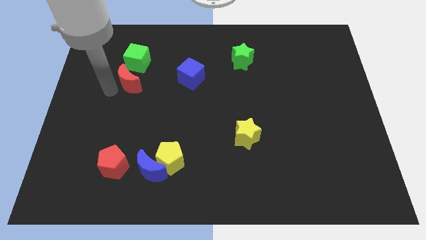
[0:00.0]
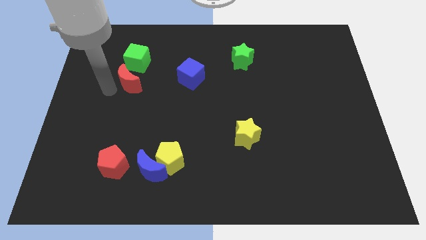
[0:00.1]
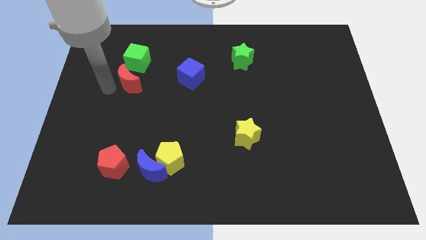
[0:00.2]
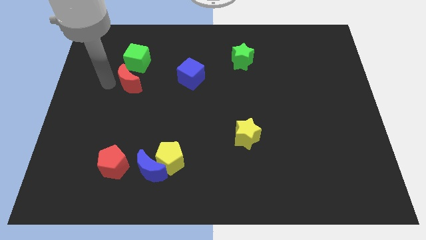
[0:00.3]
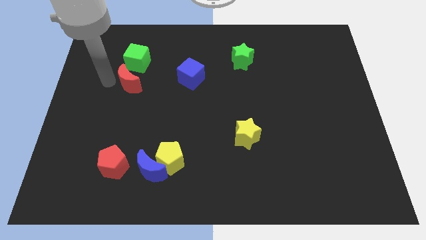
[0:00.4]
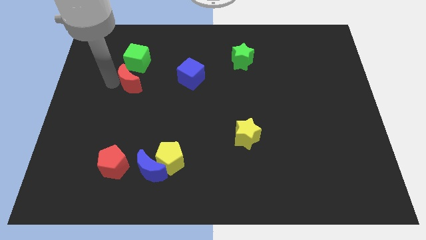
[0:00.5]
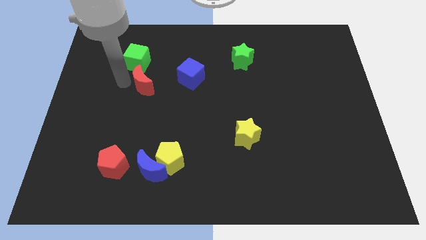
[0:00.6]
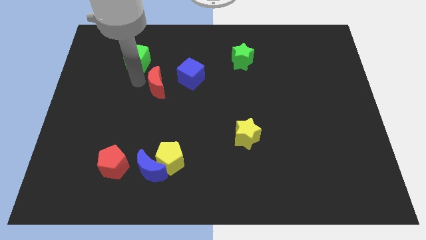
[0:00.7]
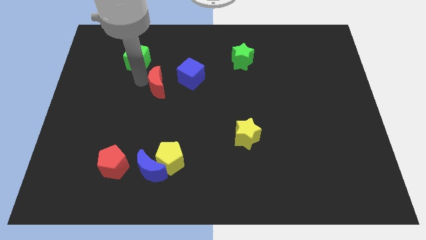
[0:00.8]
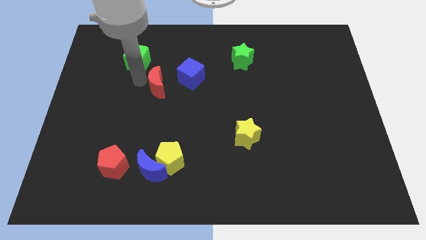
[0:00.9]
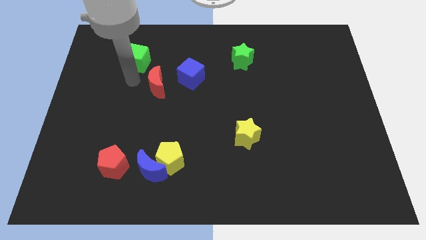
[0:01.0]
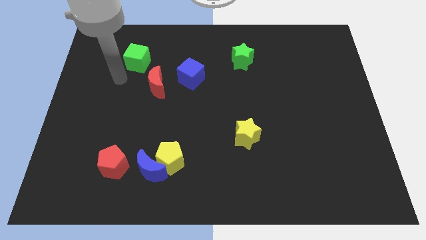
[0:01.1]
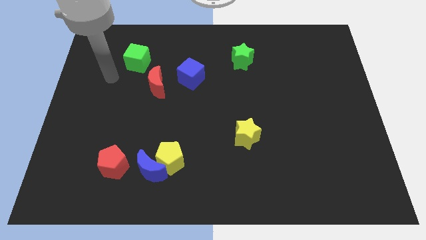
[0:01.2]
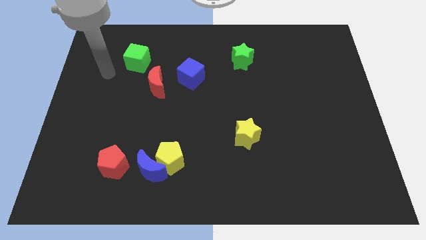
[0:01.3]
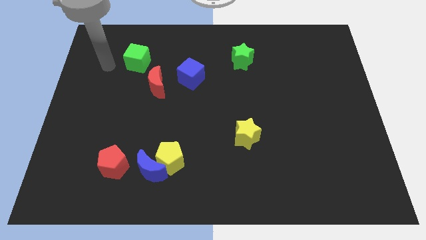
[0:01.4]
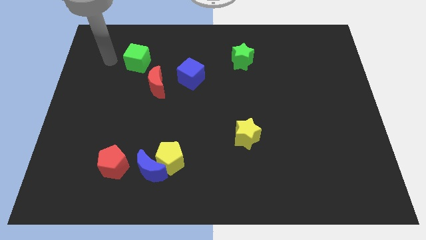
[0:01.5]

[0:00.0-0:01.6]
push the red moon towards the blue cube

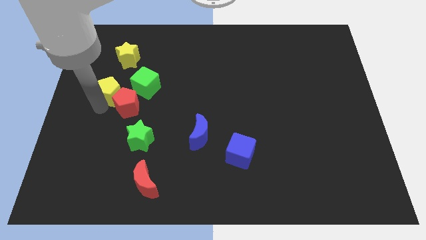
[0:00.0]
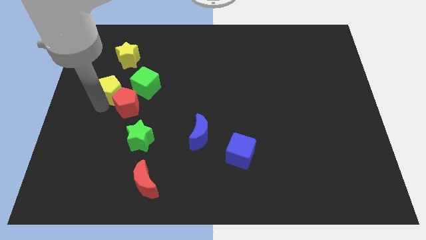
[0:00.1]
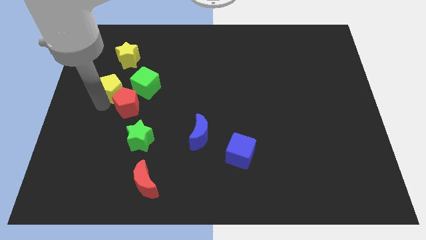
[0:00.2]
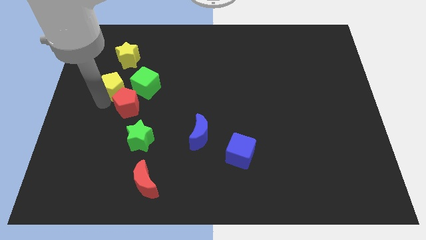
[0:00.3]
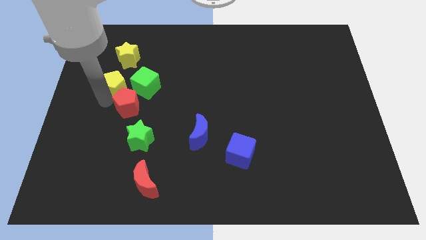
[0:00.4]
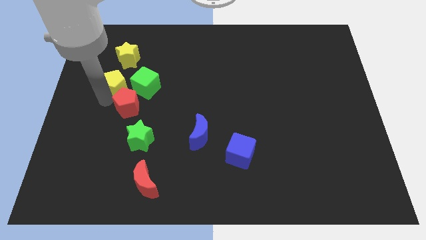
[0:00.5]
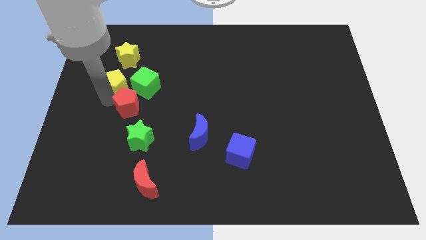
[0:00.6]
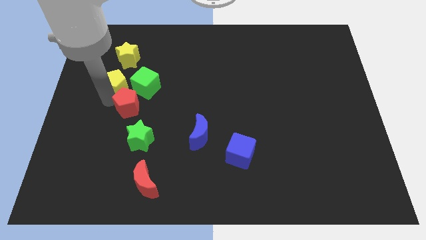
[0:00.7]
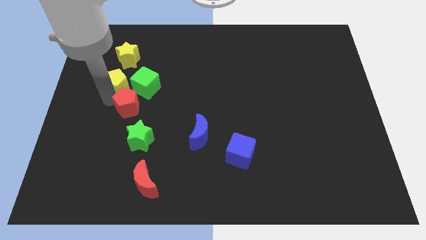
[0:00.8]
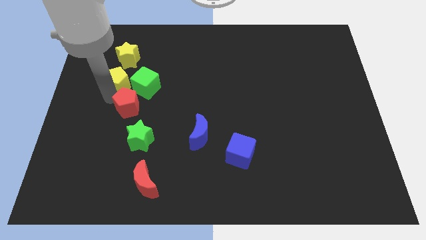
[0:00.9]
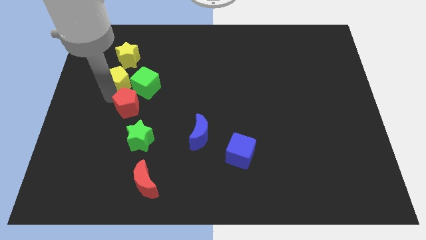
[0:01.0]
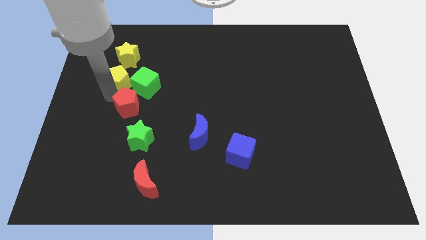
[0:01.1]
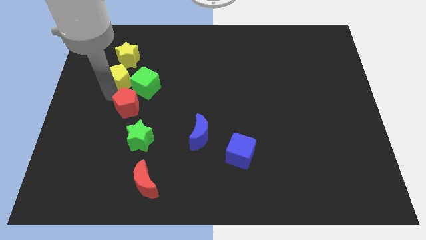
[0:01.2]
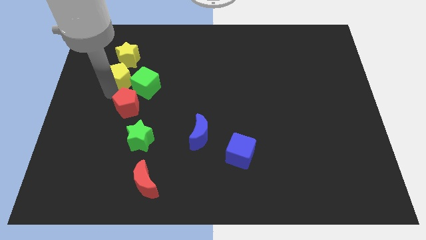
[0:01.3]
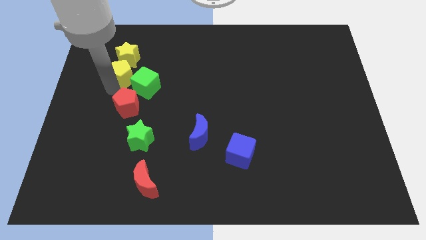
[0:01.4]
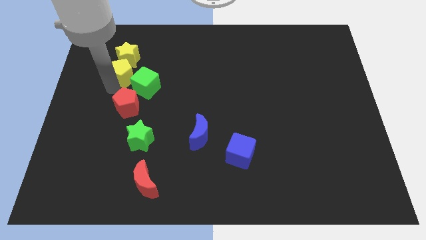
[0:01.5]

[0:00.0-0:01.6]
push the yellow pentagon to the left of the green cube

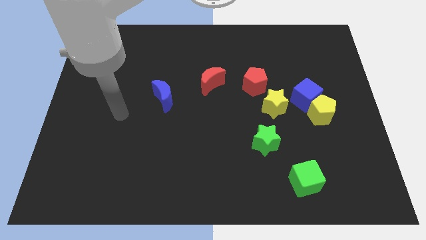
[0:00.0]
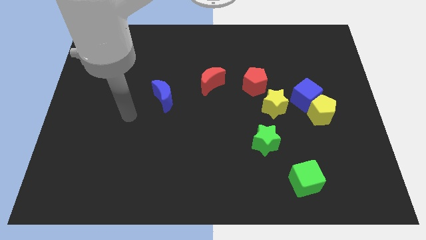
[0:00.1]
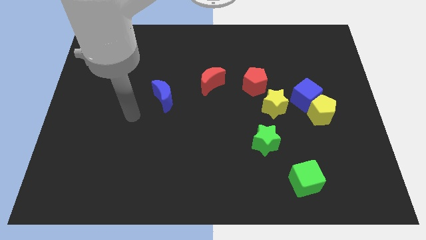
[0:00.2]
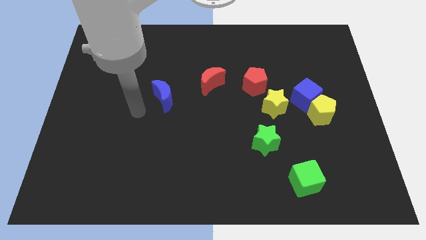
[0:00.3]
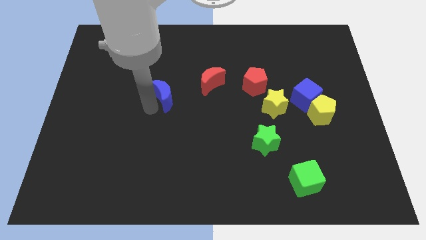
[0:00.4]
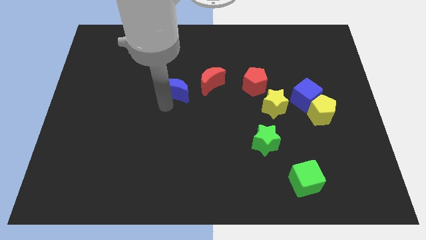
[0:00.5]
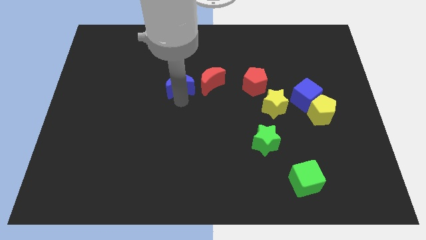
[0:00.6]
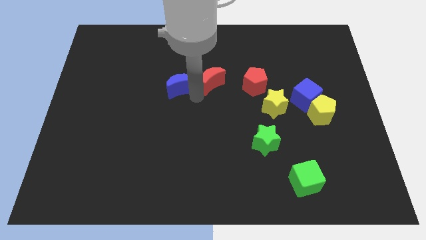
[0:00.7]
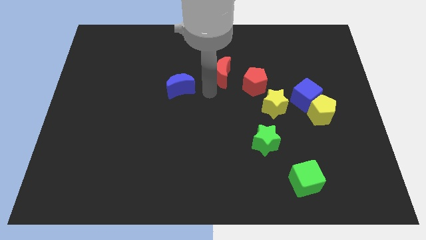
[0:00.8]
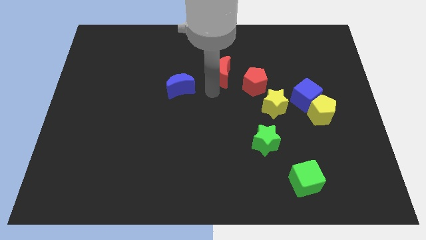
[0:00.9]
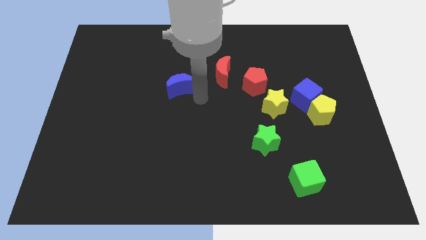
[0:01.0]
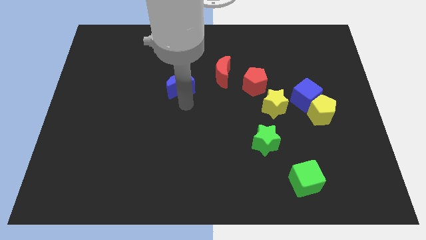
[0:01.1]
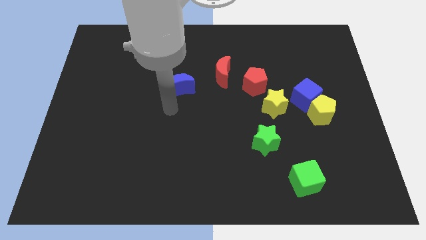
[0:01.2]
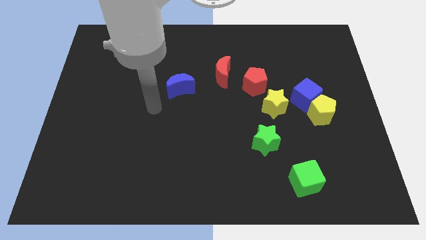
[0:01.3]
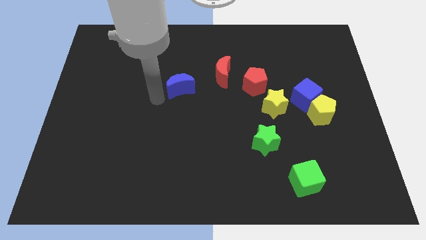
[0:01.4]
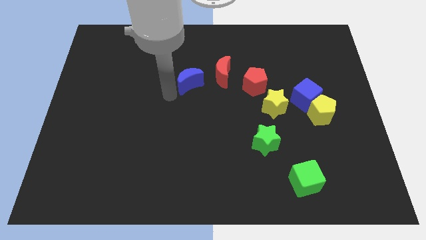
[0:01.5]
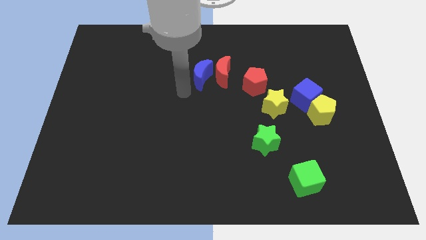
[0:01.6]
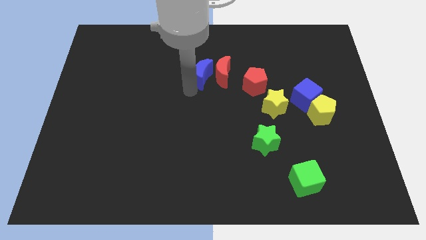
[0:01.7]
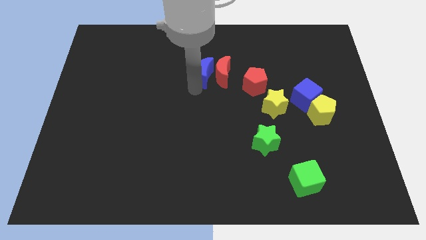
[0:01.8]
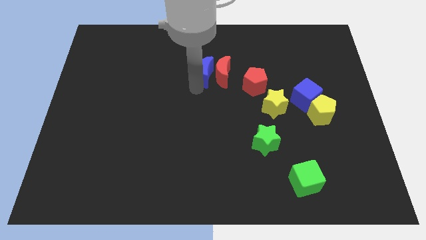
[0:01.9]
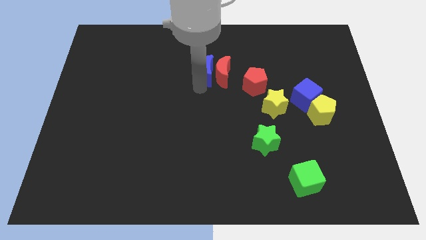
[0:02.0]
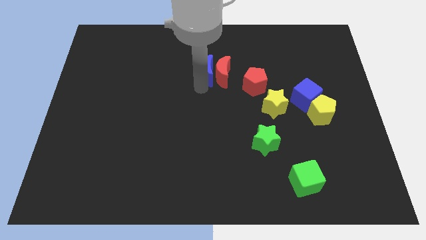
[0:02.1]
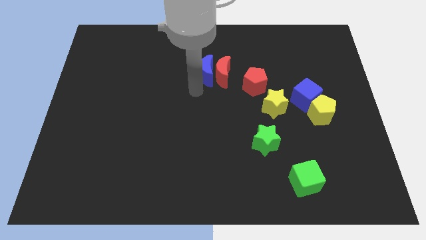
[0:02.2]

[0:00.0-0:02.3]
place both the crescents together

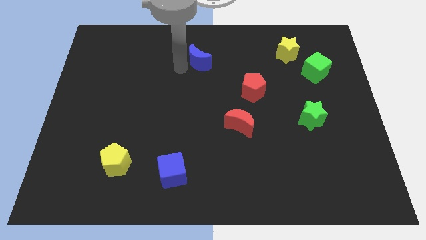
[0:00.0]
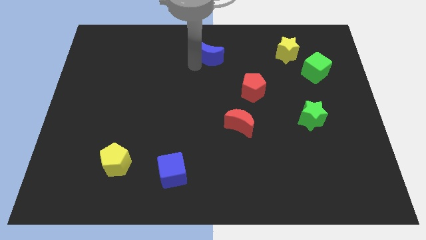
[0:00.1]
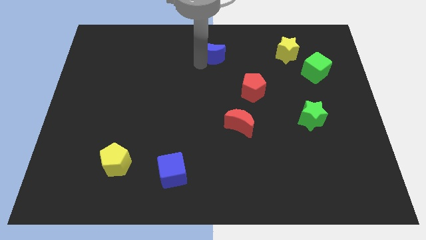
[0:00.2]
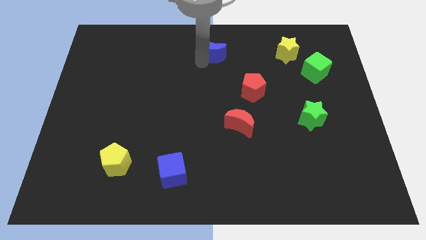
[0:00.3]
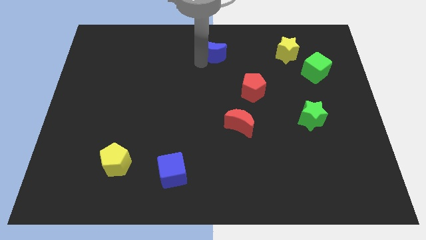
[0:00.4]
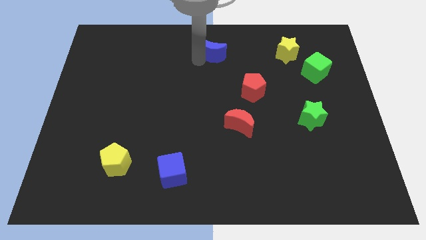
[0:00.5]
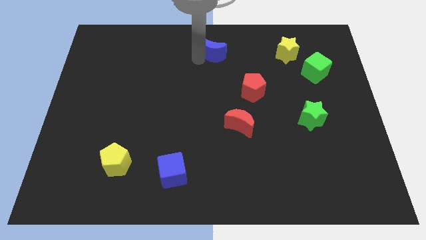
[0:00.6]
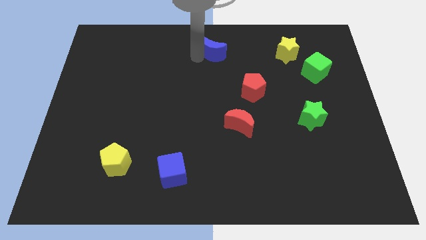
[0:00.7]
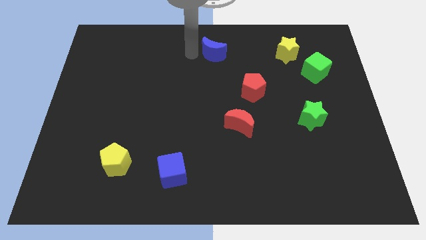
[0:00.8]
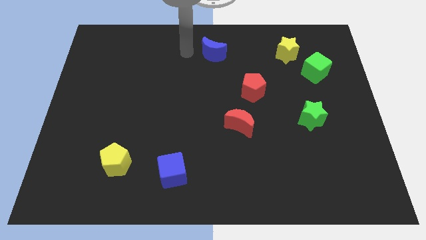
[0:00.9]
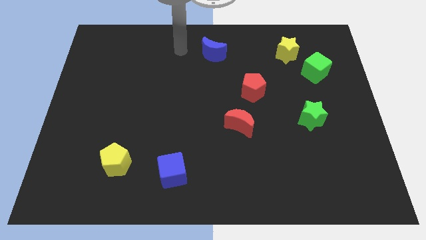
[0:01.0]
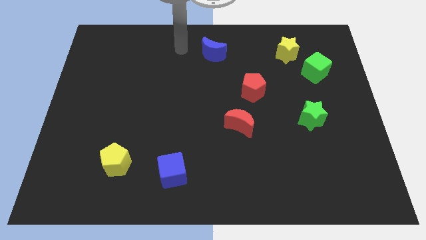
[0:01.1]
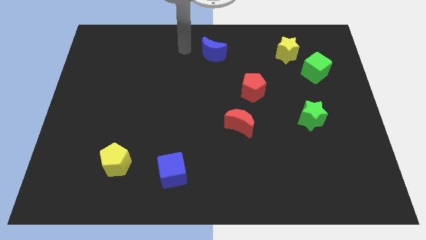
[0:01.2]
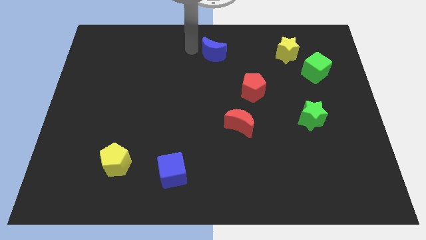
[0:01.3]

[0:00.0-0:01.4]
put the blue moon to the top center of the board

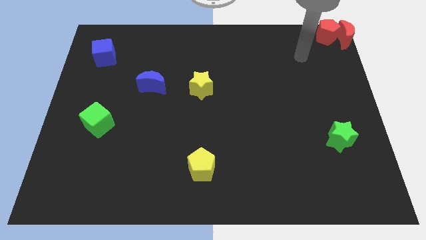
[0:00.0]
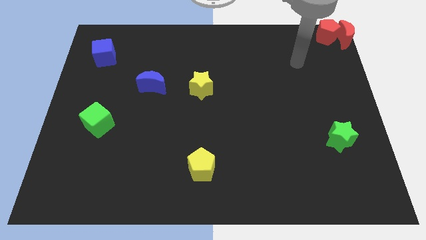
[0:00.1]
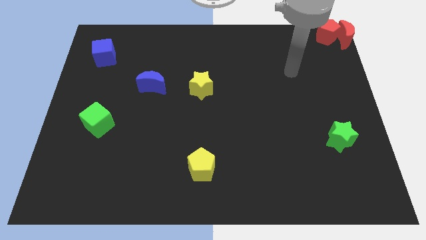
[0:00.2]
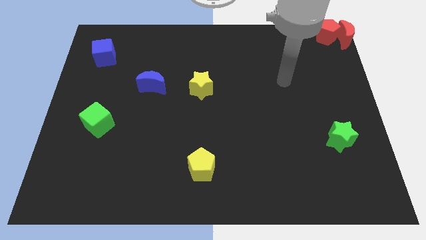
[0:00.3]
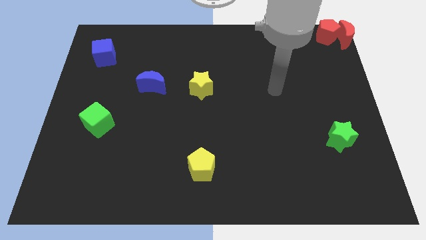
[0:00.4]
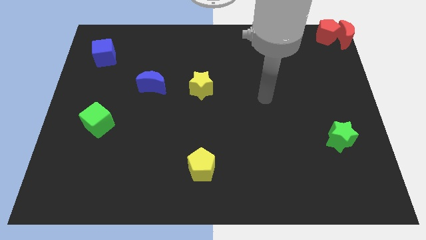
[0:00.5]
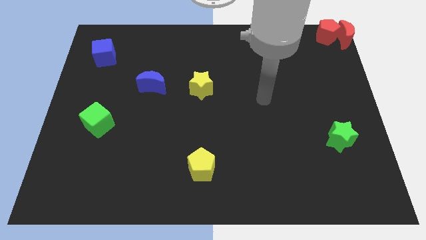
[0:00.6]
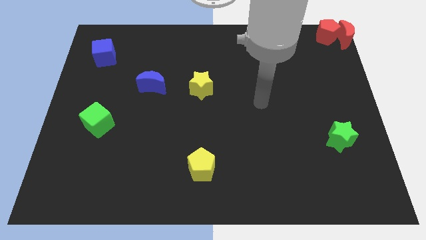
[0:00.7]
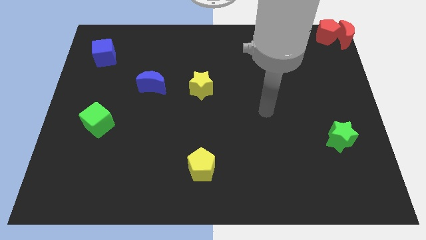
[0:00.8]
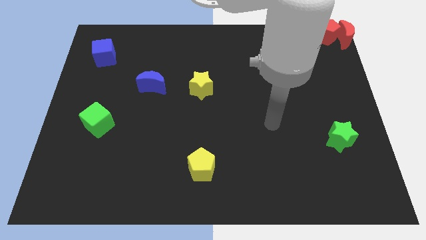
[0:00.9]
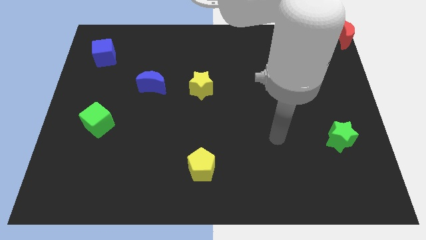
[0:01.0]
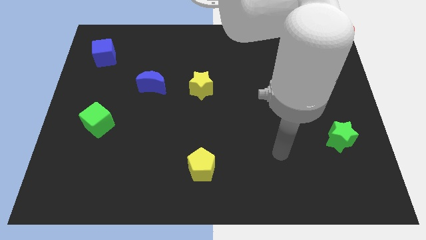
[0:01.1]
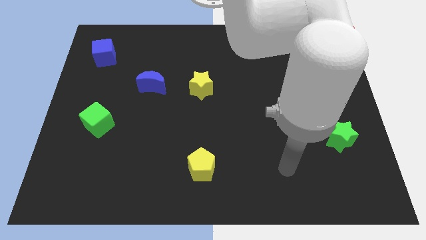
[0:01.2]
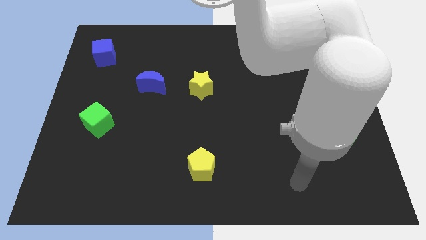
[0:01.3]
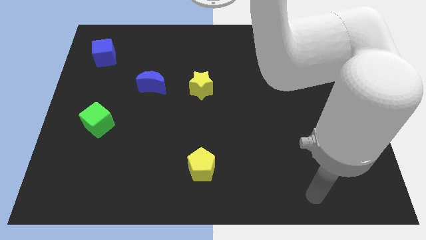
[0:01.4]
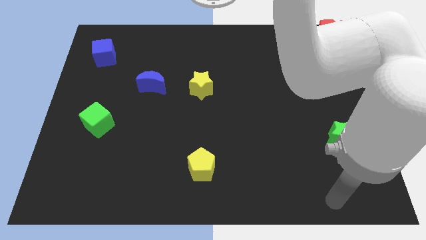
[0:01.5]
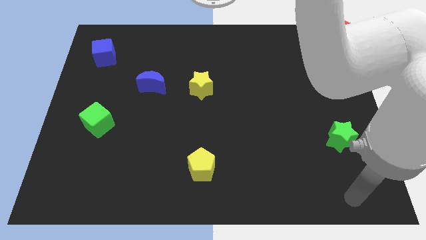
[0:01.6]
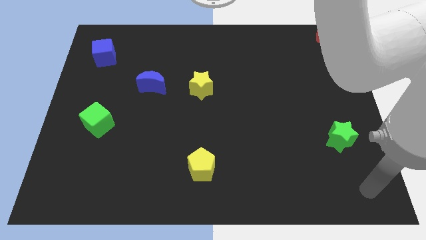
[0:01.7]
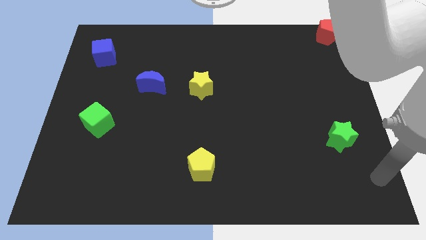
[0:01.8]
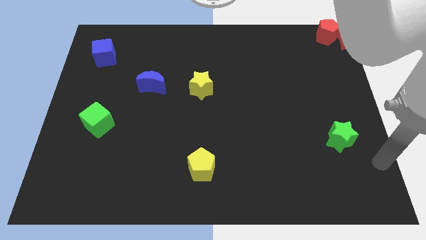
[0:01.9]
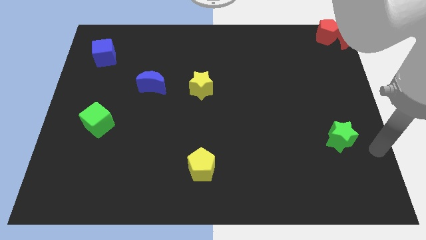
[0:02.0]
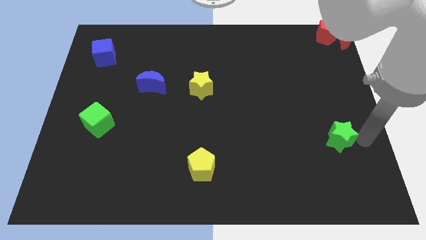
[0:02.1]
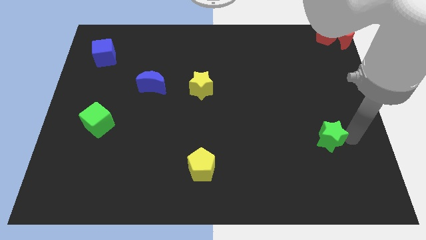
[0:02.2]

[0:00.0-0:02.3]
tap green star slightly
